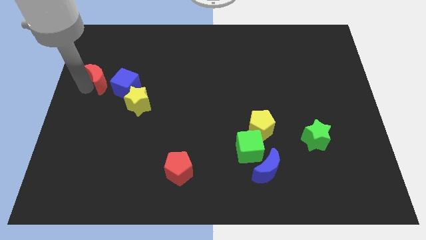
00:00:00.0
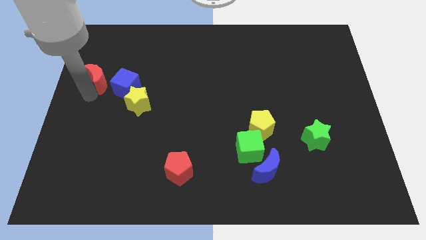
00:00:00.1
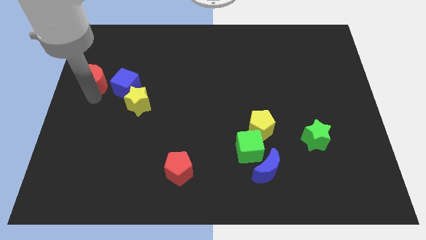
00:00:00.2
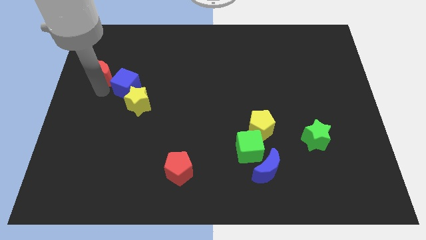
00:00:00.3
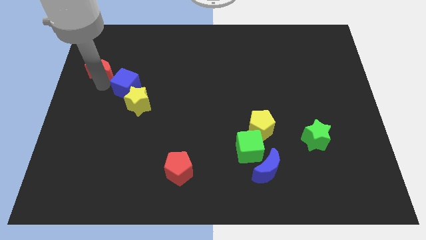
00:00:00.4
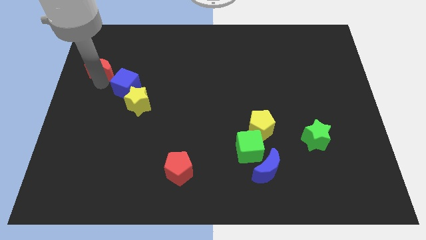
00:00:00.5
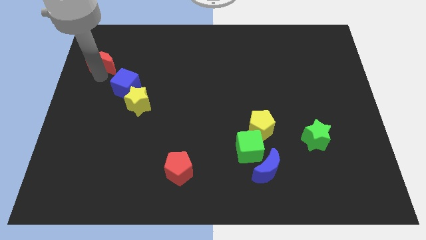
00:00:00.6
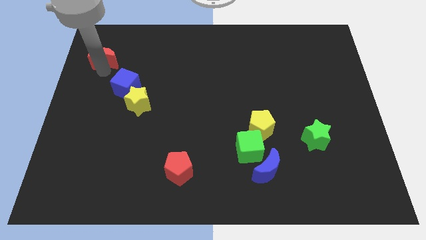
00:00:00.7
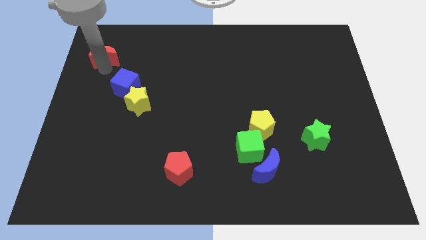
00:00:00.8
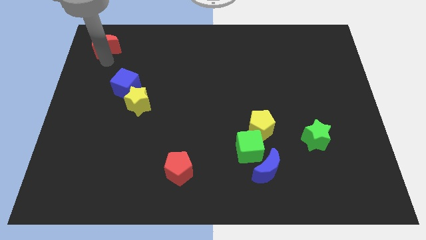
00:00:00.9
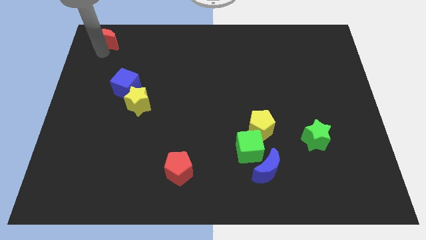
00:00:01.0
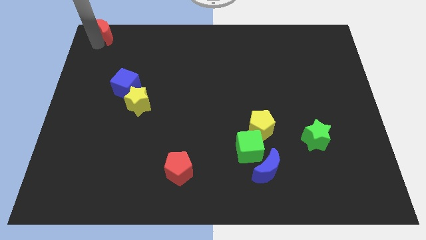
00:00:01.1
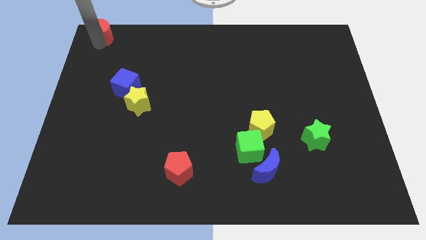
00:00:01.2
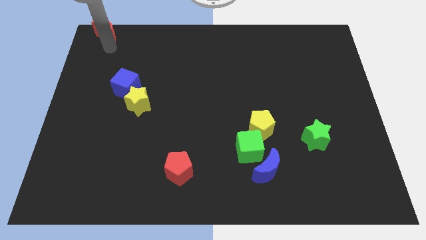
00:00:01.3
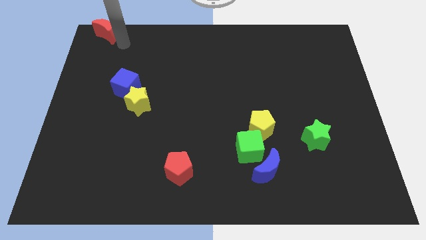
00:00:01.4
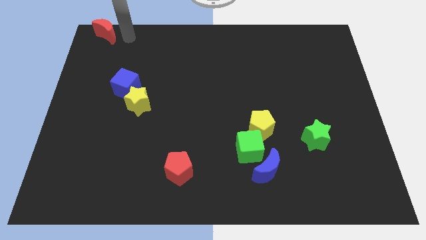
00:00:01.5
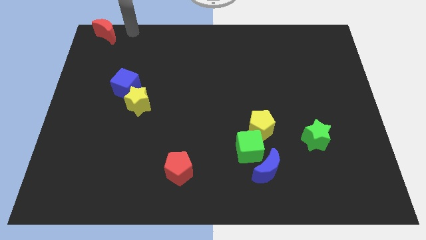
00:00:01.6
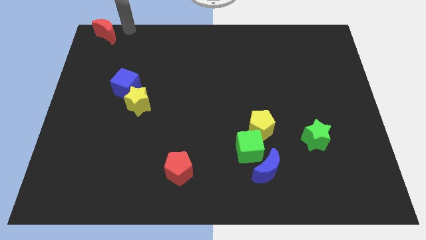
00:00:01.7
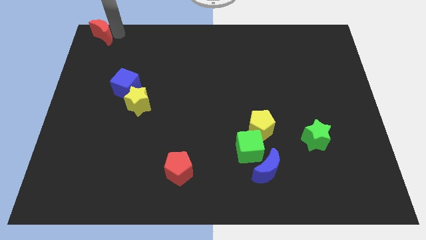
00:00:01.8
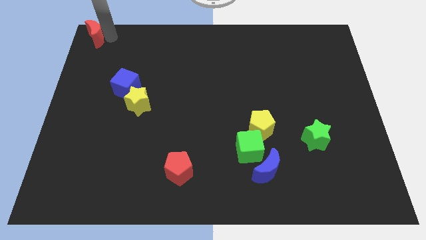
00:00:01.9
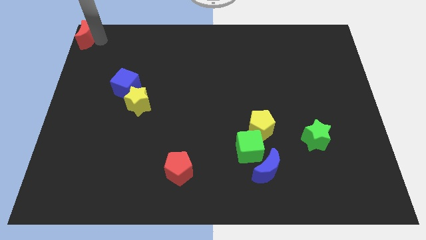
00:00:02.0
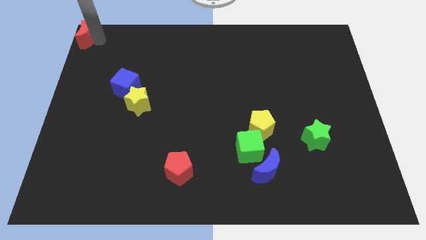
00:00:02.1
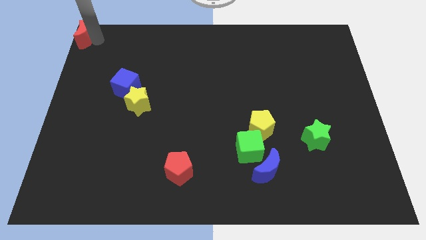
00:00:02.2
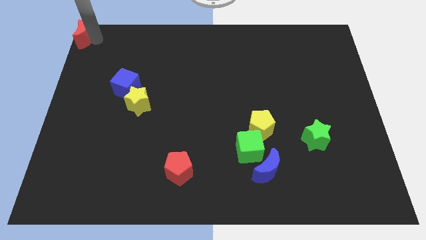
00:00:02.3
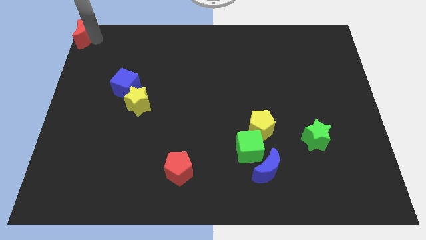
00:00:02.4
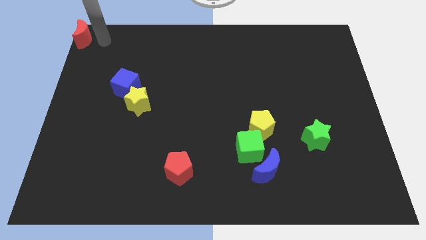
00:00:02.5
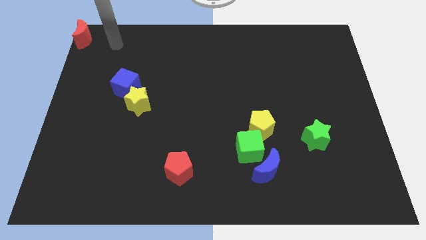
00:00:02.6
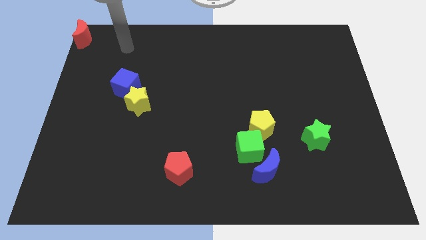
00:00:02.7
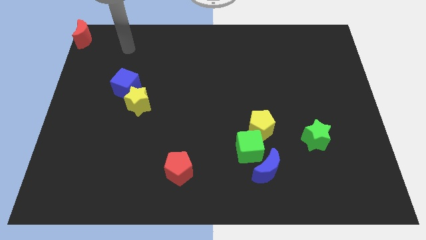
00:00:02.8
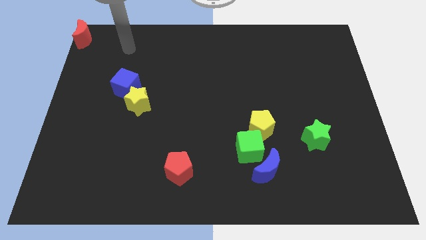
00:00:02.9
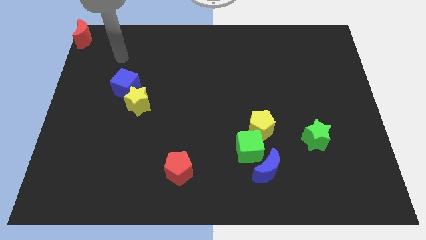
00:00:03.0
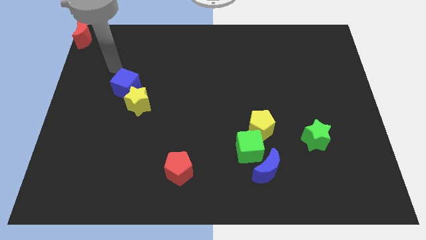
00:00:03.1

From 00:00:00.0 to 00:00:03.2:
push the red moon to the top left corner

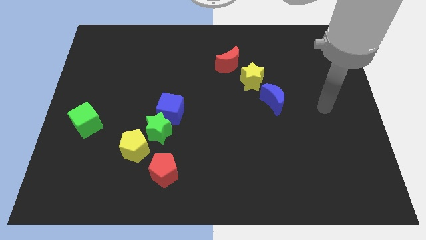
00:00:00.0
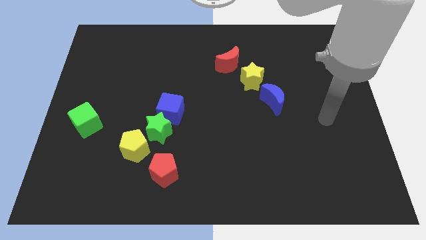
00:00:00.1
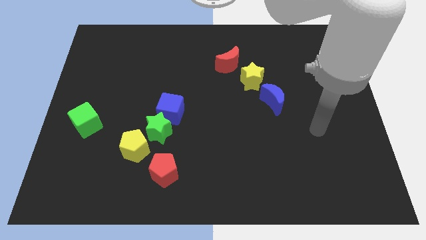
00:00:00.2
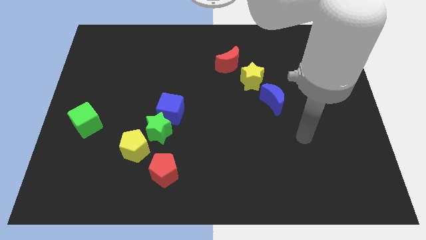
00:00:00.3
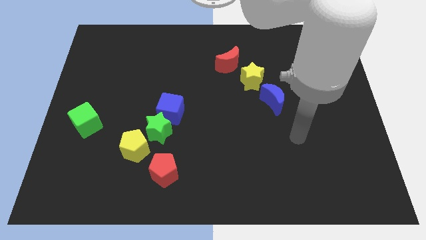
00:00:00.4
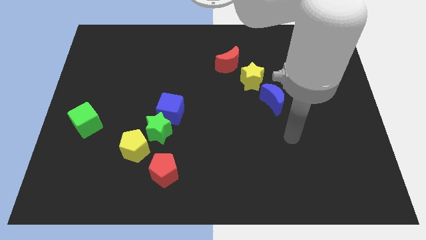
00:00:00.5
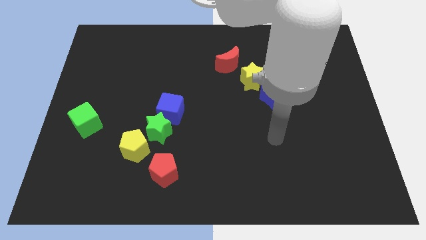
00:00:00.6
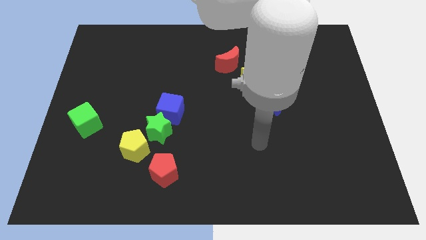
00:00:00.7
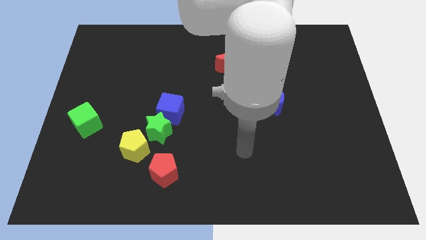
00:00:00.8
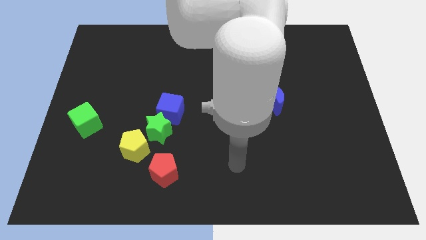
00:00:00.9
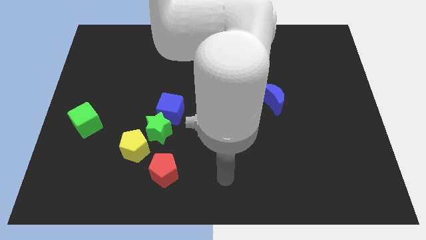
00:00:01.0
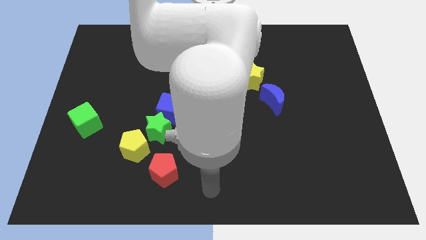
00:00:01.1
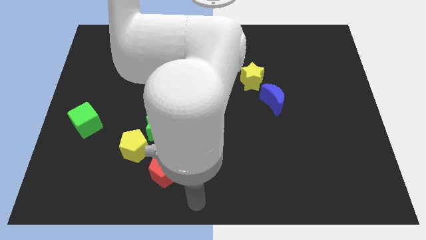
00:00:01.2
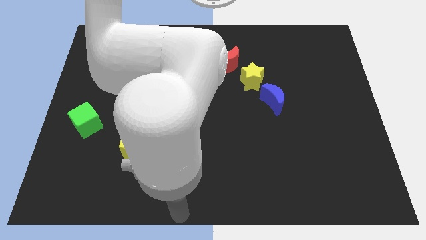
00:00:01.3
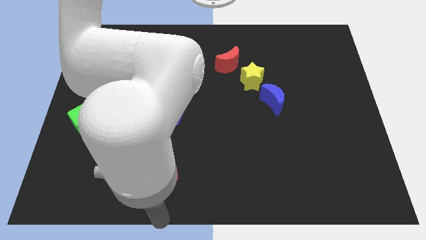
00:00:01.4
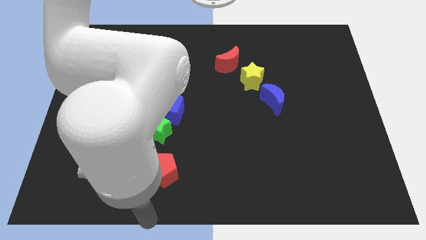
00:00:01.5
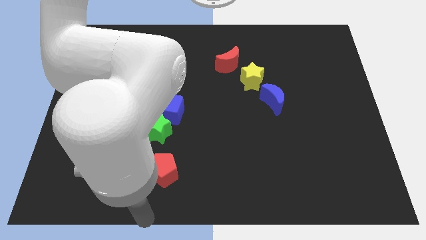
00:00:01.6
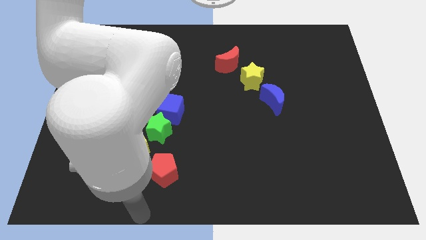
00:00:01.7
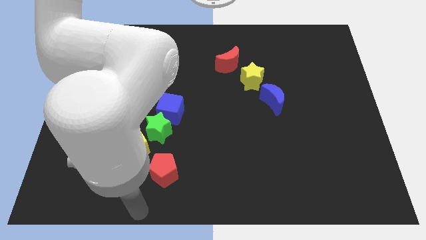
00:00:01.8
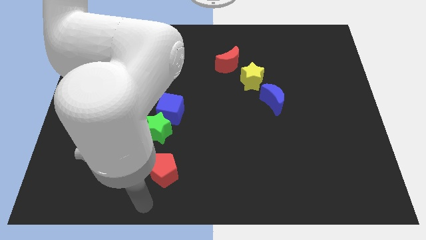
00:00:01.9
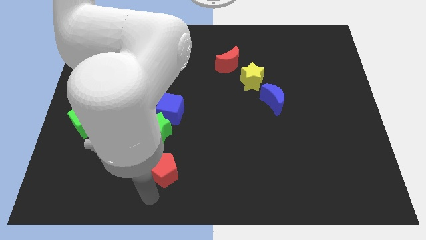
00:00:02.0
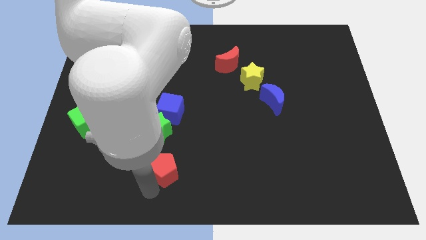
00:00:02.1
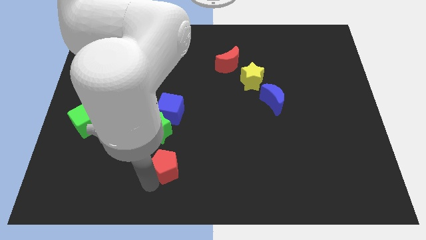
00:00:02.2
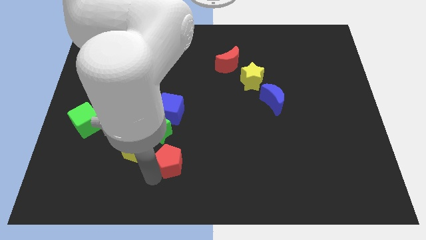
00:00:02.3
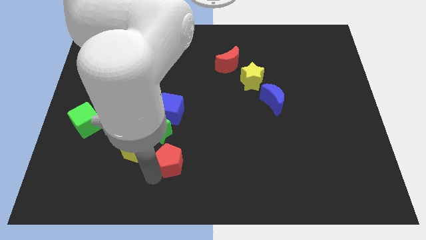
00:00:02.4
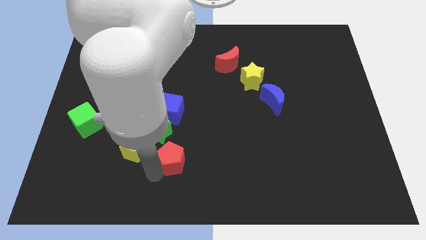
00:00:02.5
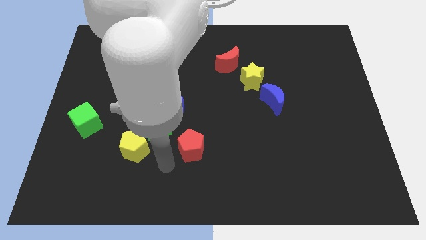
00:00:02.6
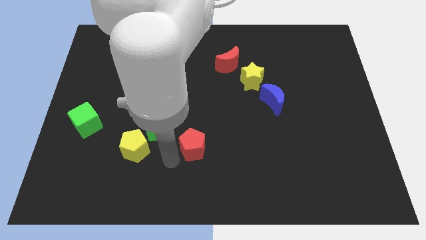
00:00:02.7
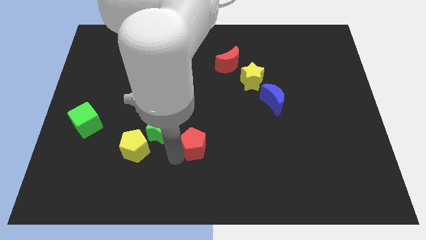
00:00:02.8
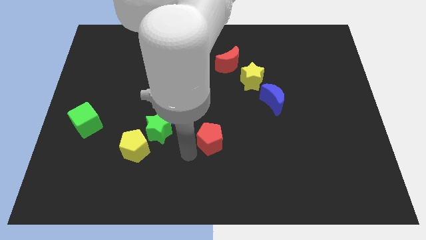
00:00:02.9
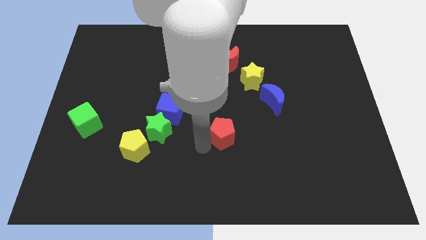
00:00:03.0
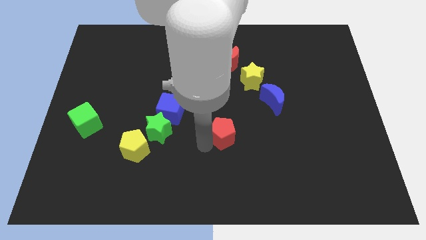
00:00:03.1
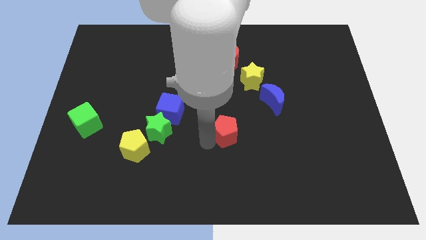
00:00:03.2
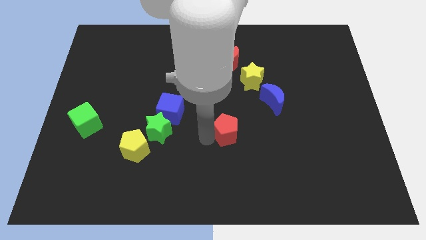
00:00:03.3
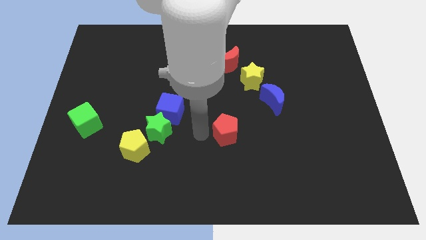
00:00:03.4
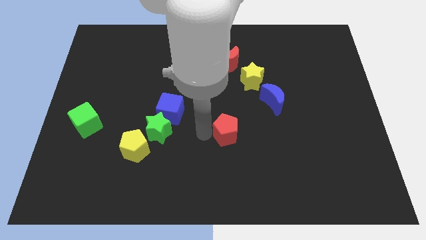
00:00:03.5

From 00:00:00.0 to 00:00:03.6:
put red pentagon vertically below red crescent

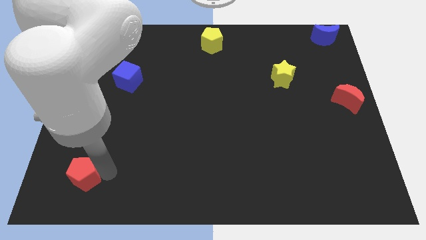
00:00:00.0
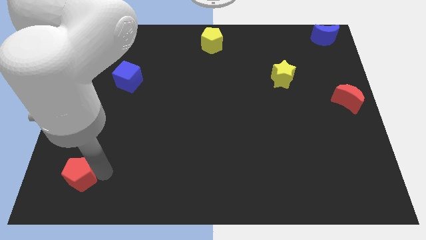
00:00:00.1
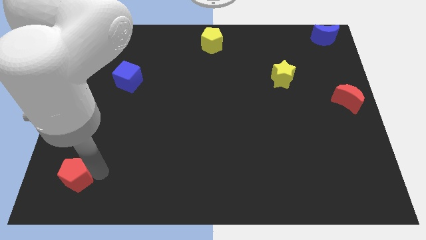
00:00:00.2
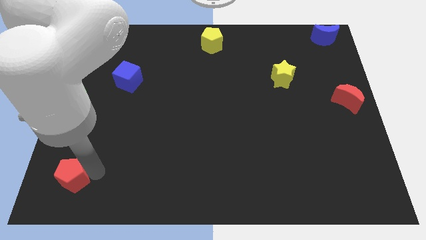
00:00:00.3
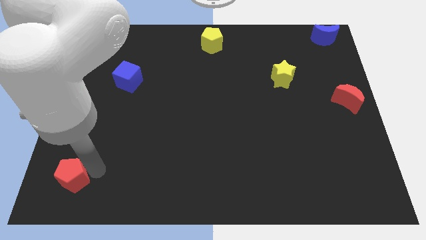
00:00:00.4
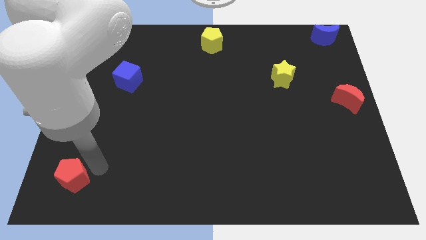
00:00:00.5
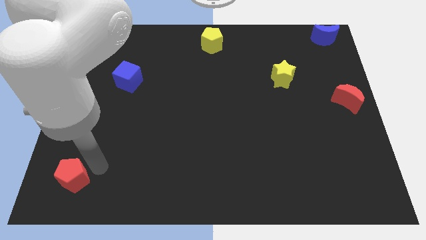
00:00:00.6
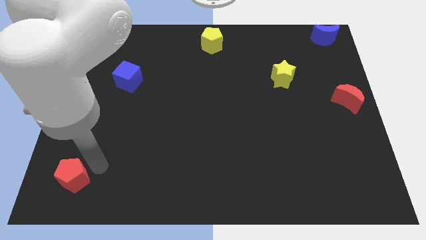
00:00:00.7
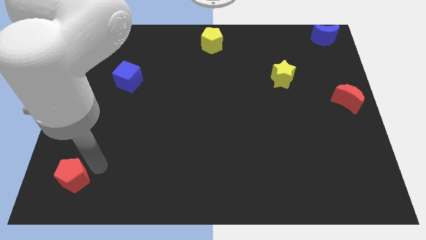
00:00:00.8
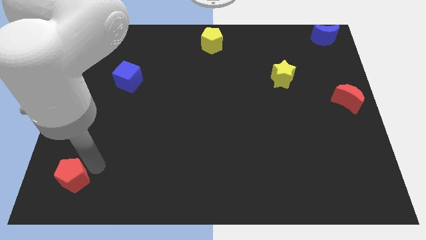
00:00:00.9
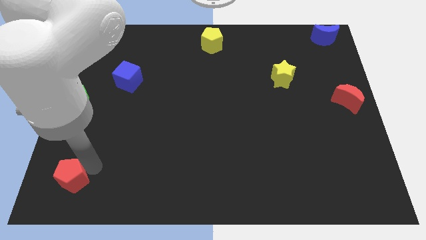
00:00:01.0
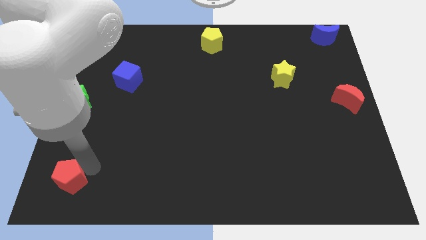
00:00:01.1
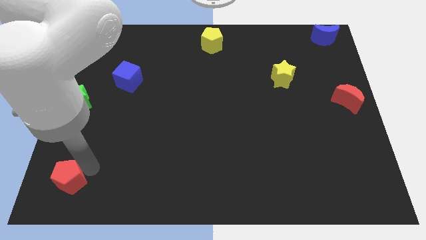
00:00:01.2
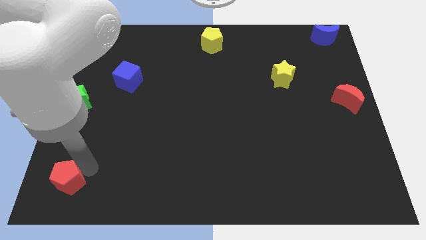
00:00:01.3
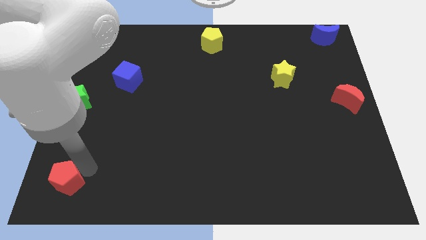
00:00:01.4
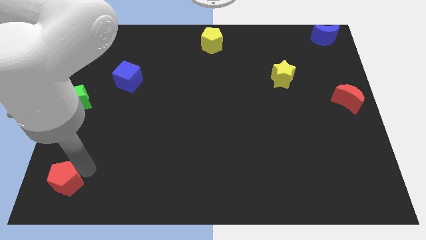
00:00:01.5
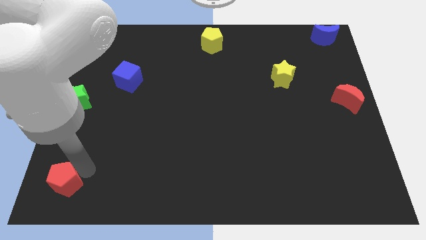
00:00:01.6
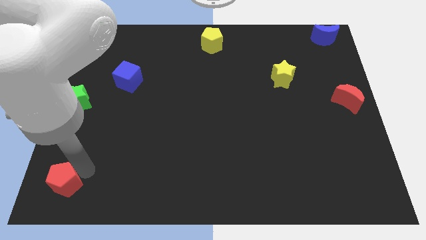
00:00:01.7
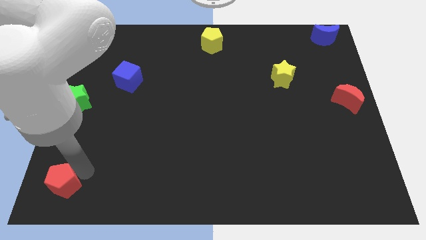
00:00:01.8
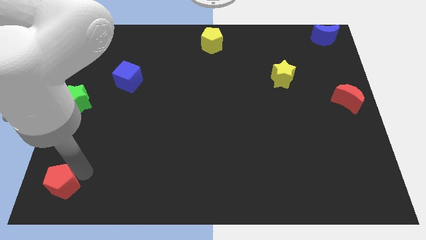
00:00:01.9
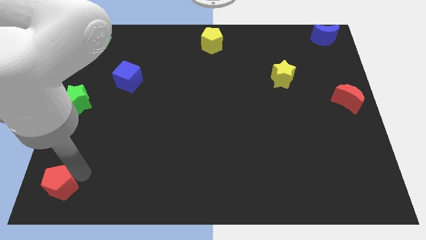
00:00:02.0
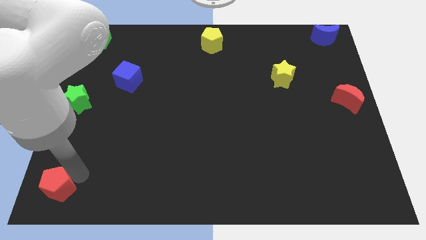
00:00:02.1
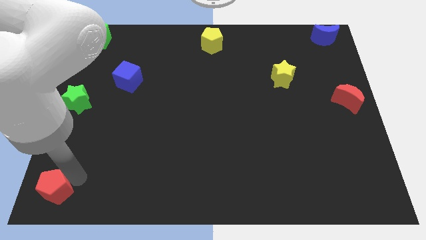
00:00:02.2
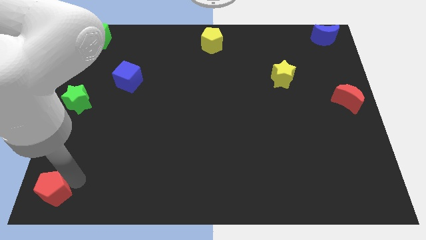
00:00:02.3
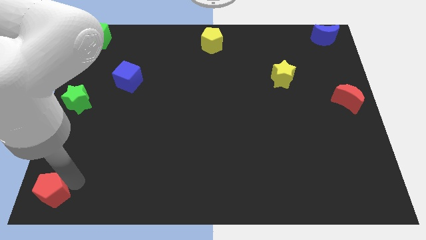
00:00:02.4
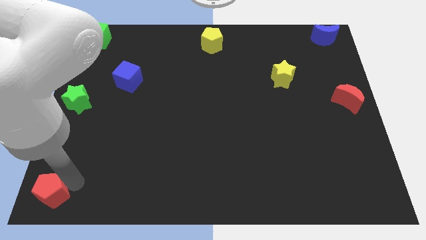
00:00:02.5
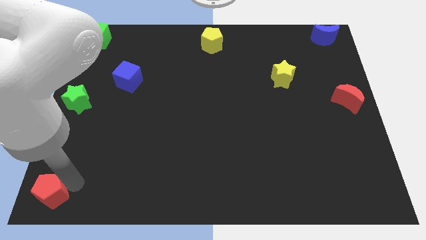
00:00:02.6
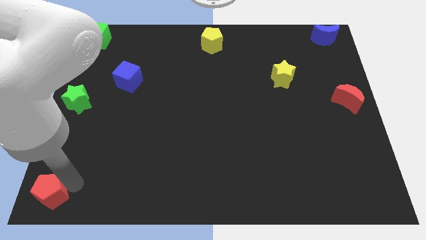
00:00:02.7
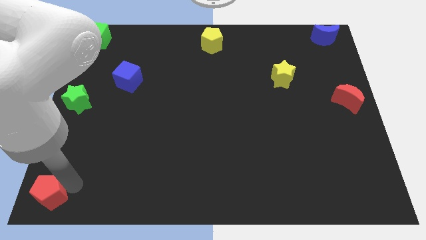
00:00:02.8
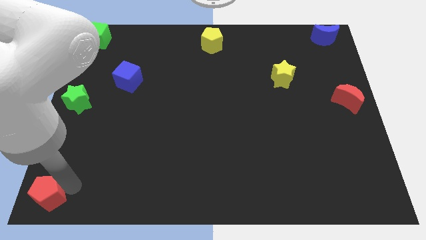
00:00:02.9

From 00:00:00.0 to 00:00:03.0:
place the red pentagon at the bottom left of the board
